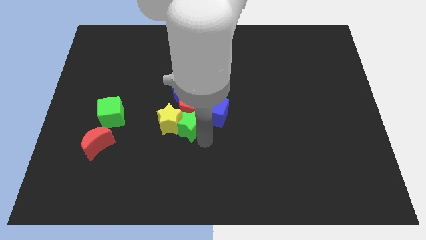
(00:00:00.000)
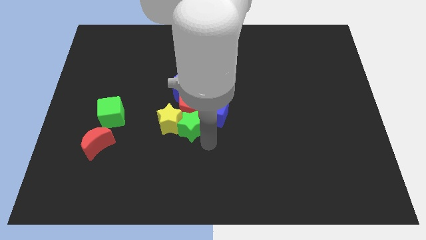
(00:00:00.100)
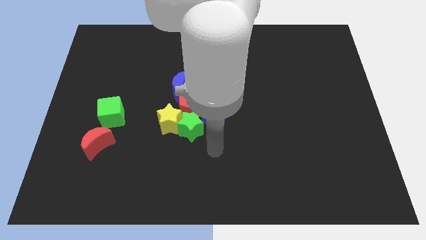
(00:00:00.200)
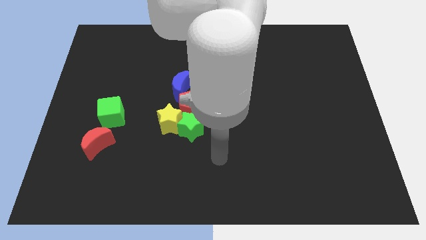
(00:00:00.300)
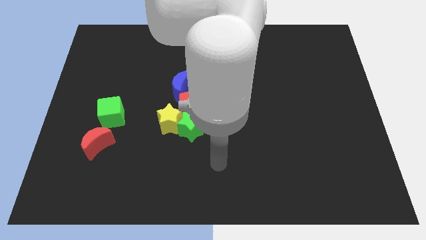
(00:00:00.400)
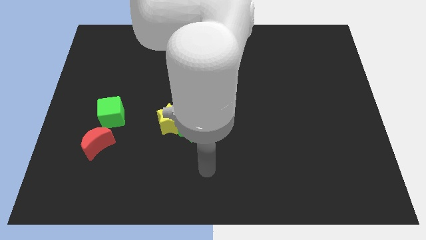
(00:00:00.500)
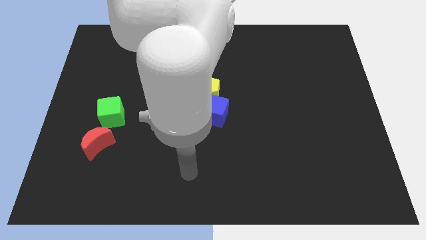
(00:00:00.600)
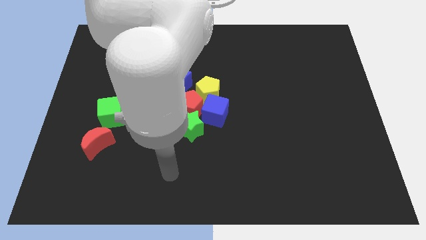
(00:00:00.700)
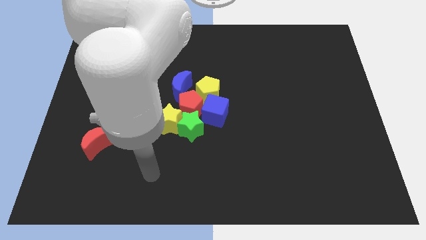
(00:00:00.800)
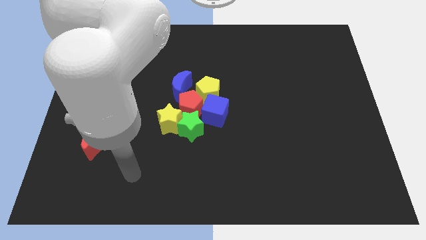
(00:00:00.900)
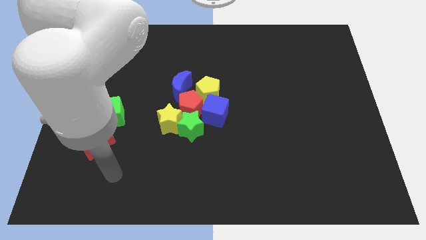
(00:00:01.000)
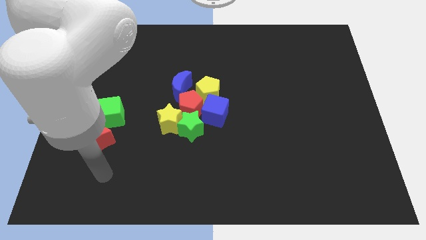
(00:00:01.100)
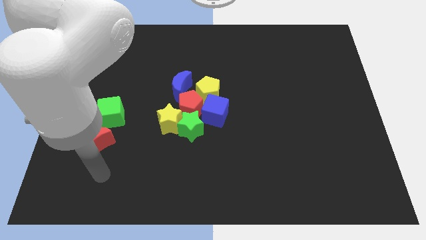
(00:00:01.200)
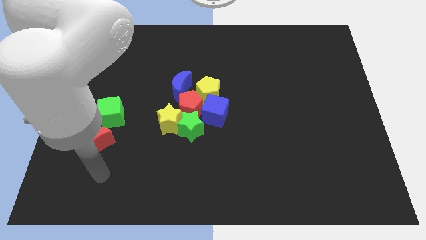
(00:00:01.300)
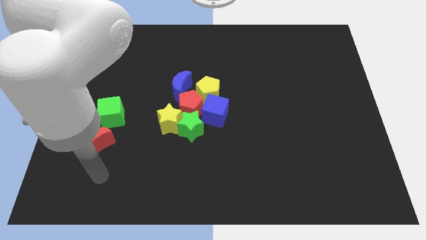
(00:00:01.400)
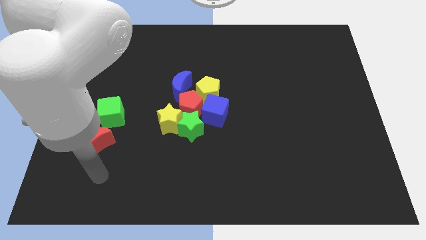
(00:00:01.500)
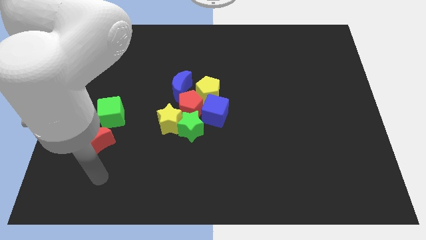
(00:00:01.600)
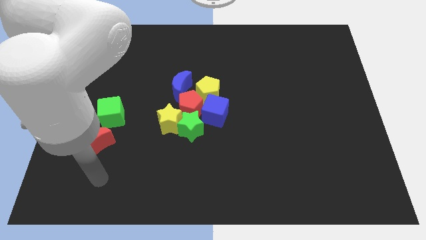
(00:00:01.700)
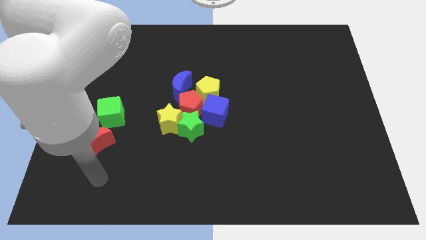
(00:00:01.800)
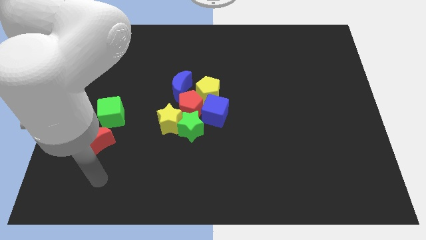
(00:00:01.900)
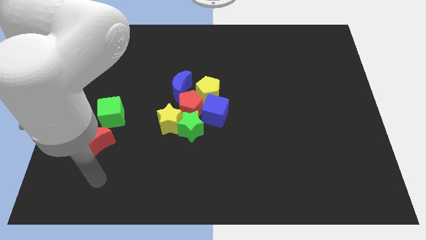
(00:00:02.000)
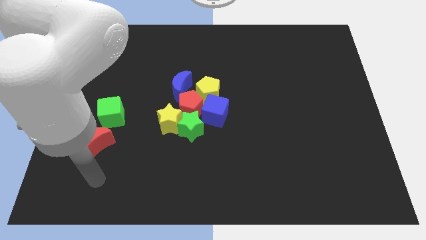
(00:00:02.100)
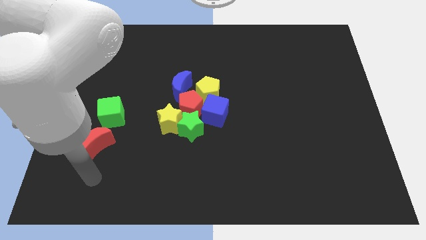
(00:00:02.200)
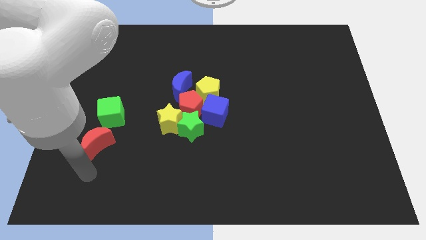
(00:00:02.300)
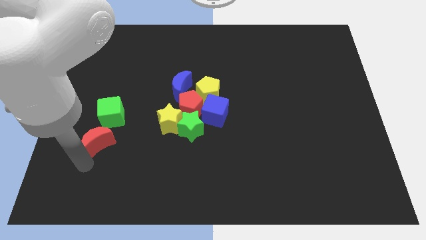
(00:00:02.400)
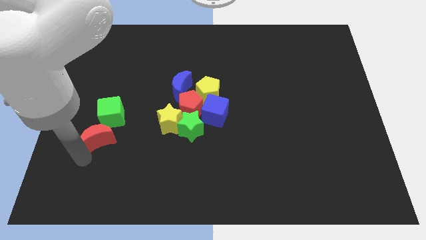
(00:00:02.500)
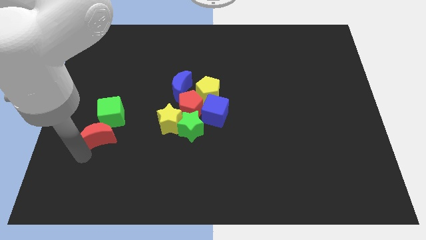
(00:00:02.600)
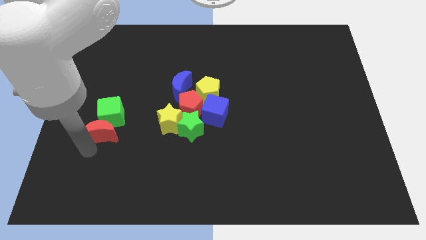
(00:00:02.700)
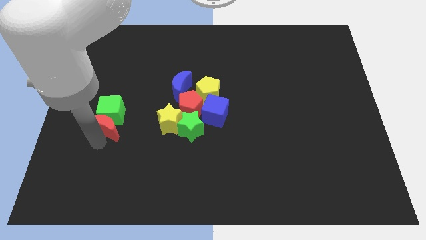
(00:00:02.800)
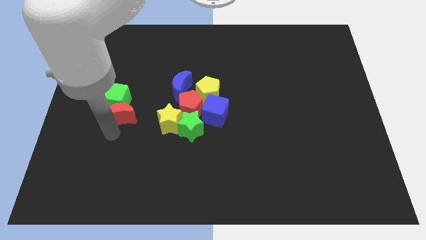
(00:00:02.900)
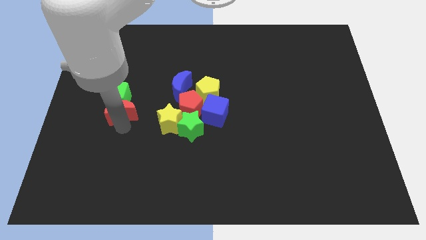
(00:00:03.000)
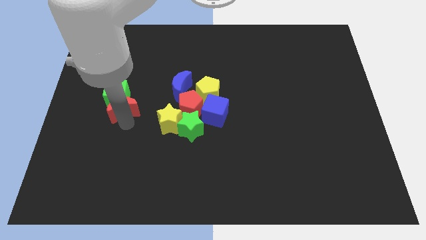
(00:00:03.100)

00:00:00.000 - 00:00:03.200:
push the red moon into the green cube

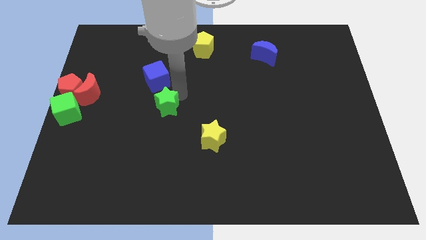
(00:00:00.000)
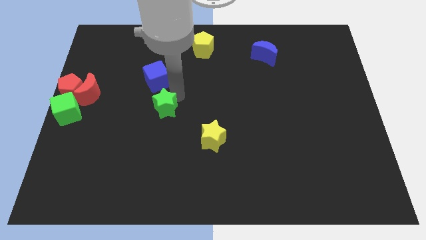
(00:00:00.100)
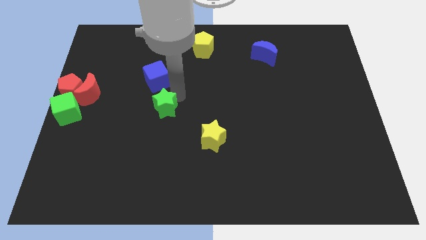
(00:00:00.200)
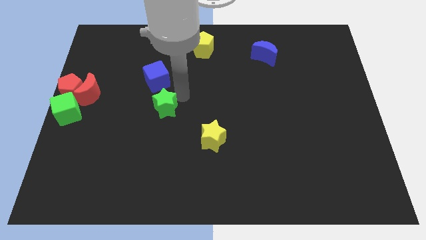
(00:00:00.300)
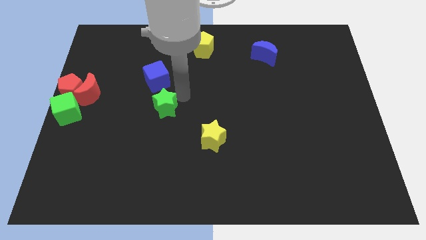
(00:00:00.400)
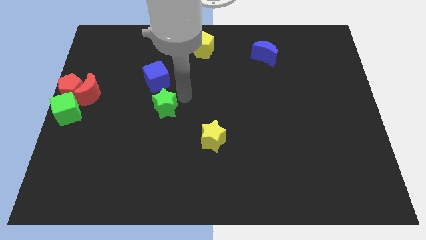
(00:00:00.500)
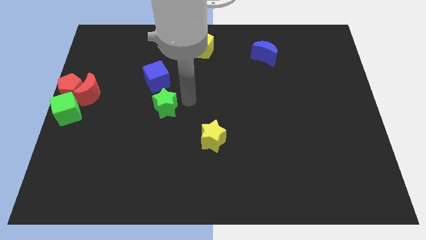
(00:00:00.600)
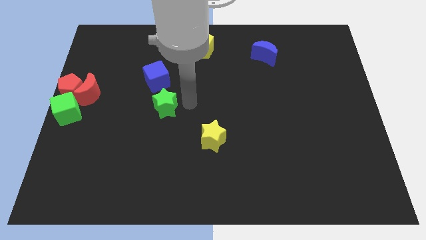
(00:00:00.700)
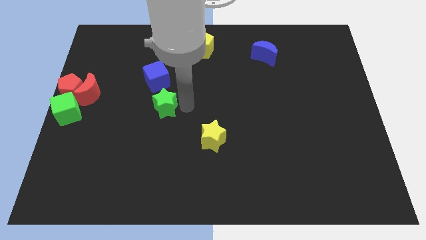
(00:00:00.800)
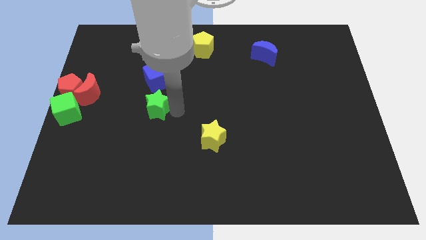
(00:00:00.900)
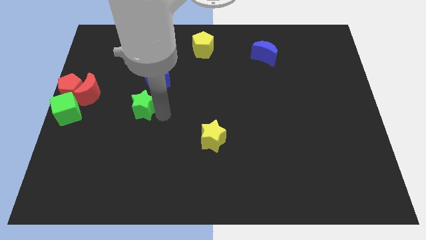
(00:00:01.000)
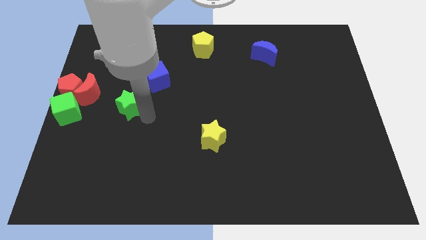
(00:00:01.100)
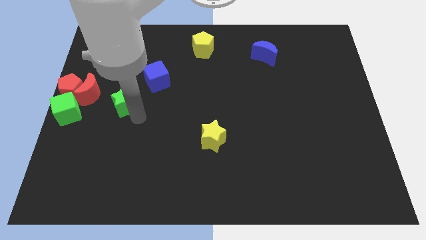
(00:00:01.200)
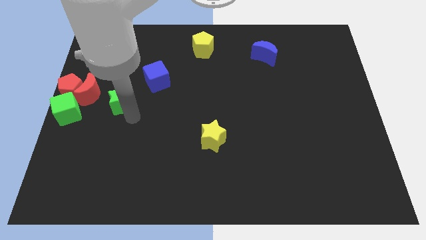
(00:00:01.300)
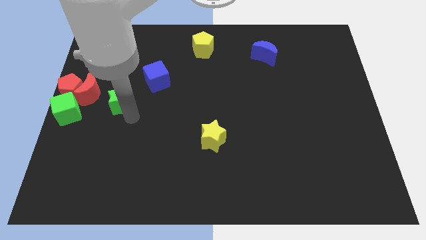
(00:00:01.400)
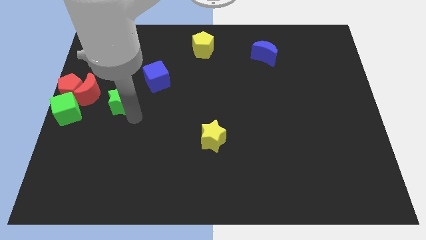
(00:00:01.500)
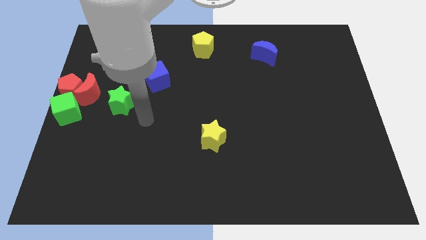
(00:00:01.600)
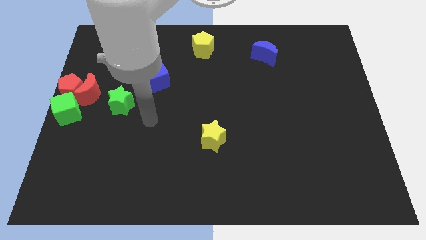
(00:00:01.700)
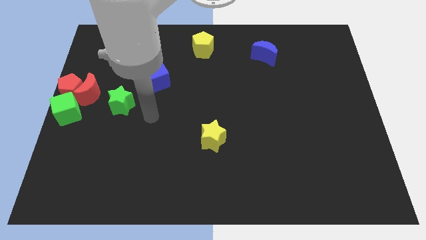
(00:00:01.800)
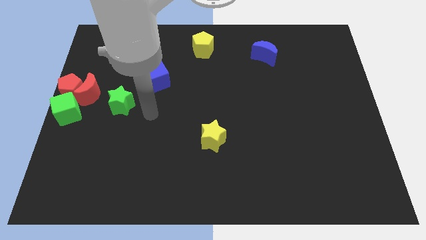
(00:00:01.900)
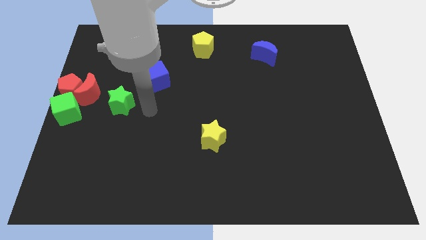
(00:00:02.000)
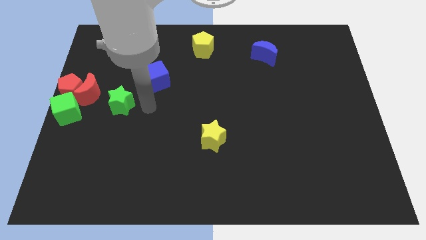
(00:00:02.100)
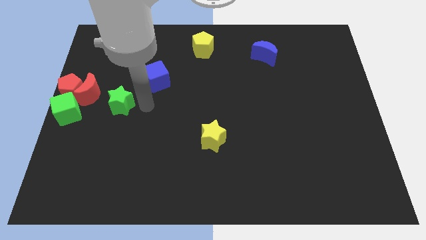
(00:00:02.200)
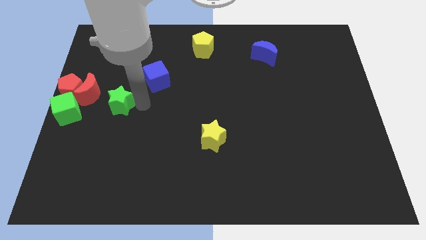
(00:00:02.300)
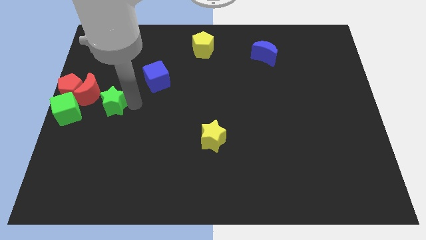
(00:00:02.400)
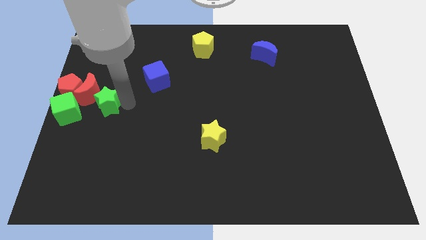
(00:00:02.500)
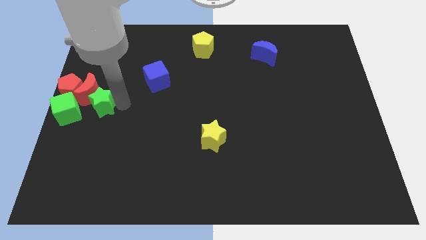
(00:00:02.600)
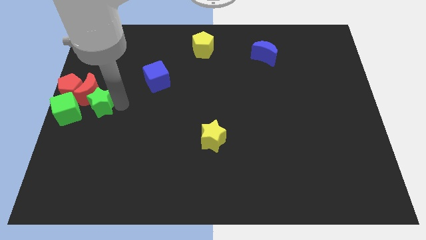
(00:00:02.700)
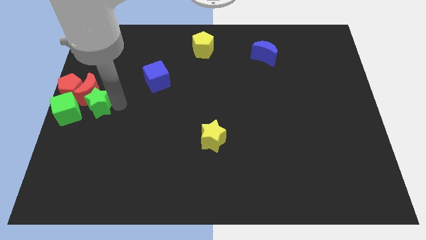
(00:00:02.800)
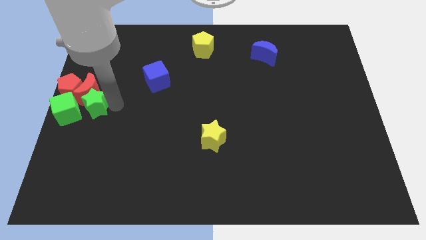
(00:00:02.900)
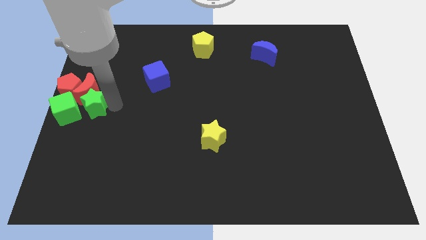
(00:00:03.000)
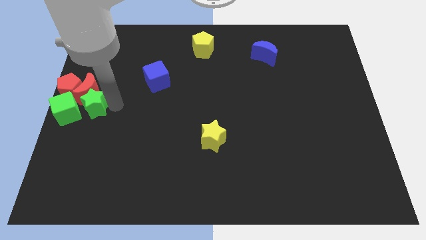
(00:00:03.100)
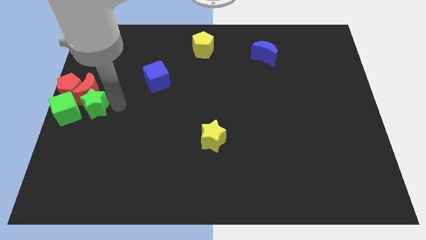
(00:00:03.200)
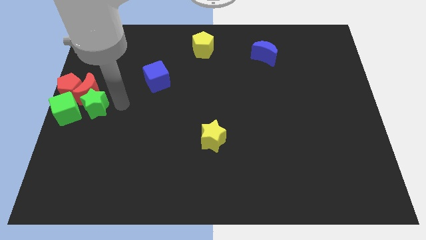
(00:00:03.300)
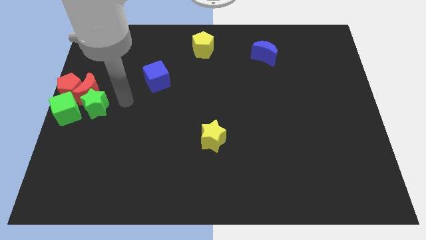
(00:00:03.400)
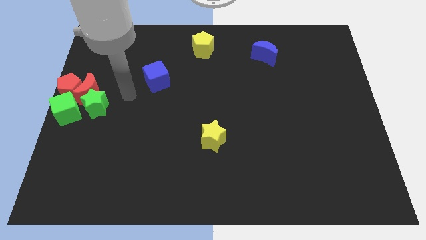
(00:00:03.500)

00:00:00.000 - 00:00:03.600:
place green star beside green cube

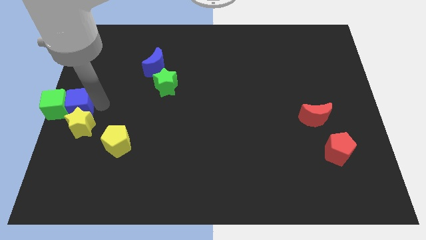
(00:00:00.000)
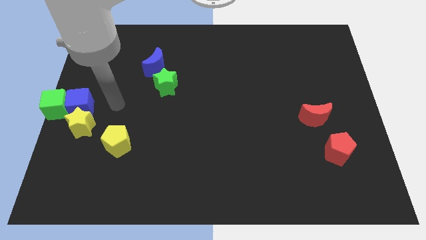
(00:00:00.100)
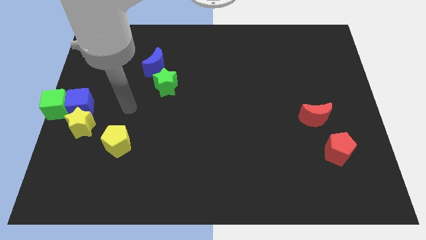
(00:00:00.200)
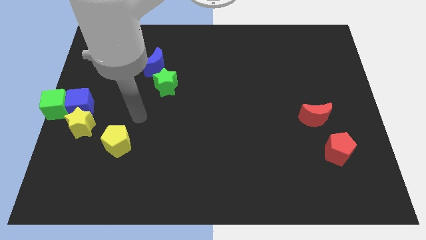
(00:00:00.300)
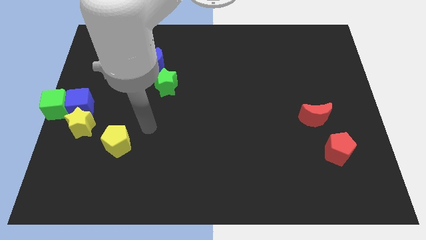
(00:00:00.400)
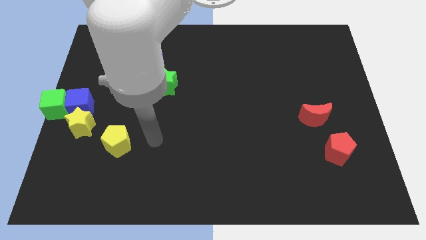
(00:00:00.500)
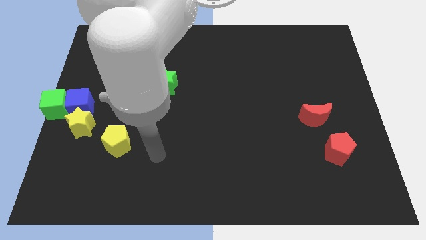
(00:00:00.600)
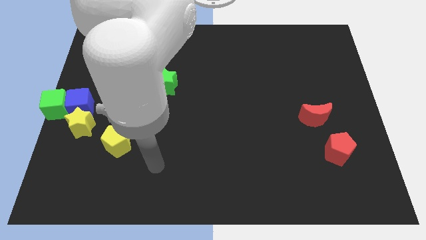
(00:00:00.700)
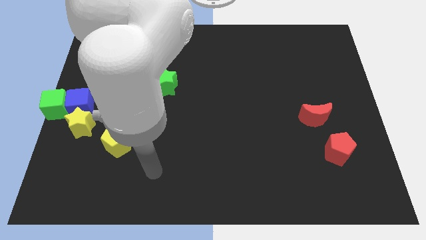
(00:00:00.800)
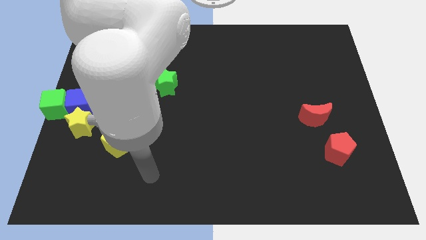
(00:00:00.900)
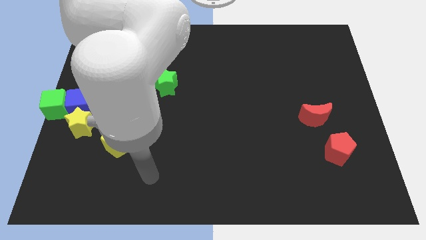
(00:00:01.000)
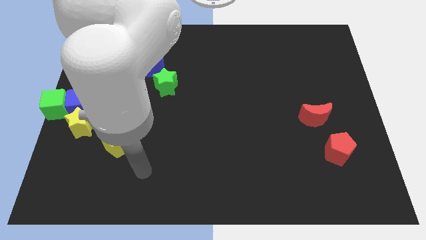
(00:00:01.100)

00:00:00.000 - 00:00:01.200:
move your arm to the bottom of yellow pentagon

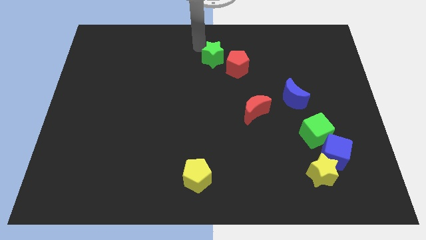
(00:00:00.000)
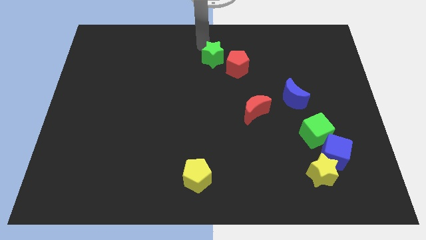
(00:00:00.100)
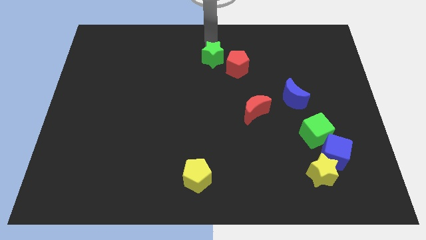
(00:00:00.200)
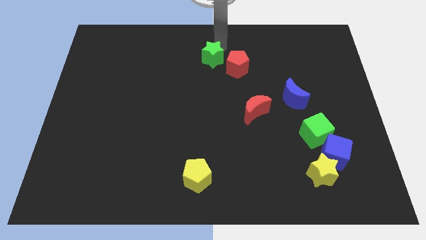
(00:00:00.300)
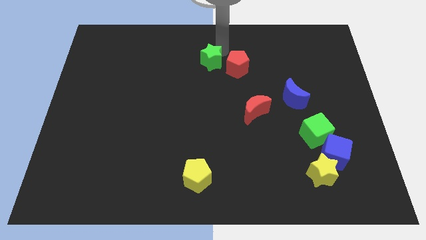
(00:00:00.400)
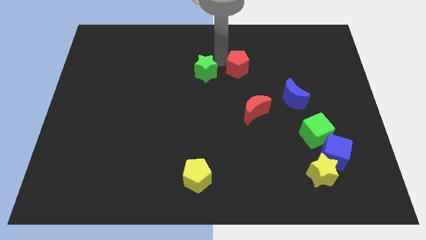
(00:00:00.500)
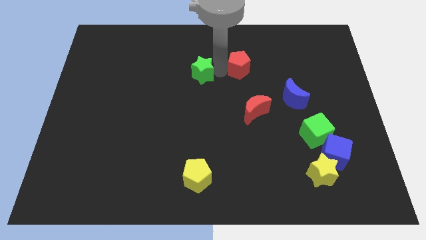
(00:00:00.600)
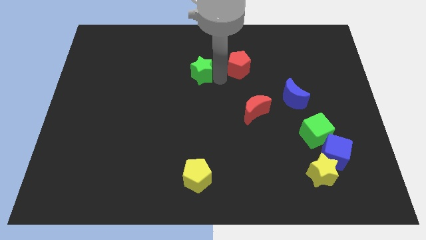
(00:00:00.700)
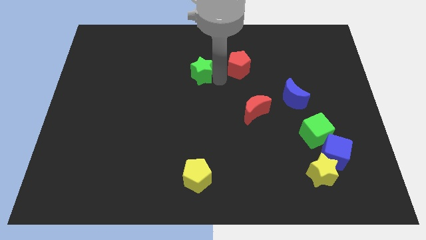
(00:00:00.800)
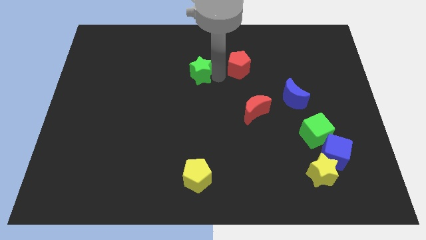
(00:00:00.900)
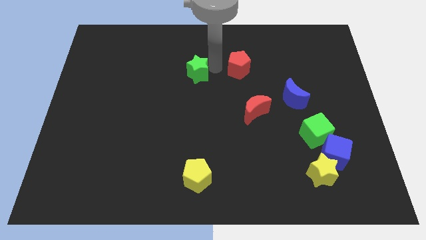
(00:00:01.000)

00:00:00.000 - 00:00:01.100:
move the green star away from red pentagon
